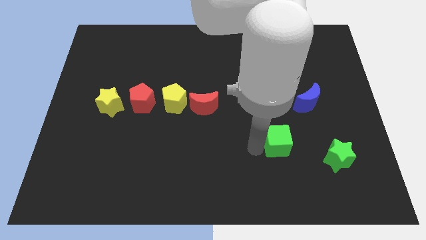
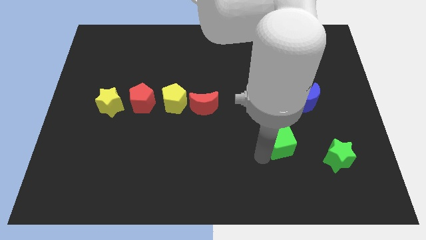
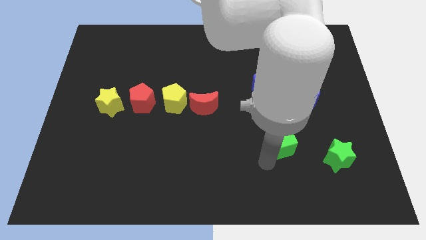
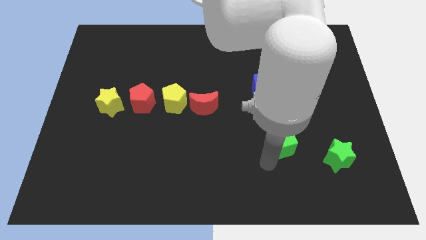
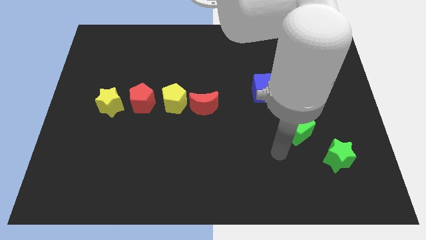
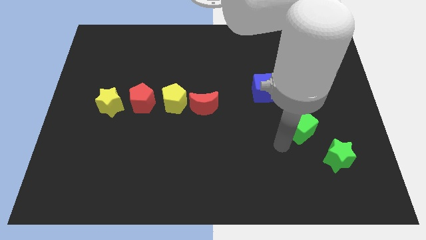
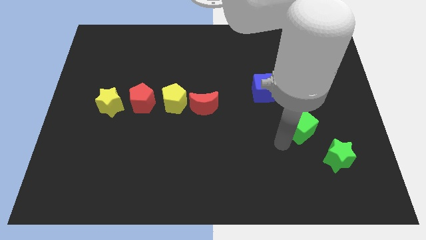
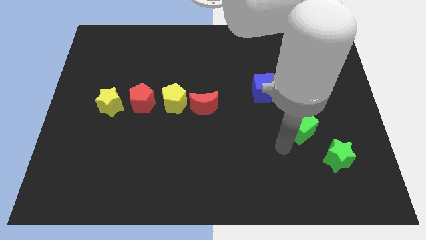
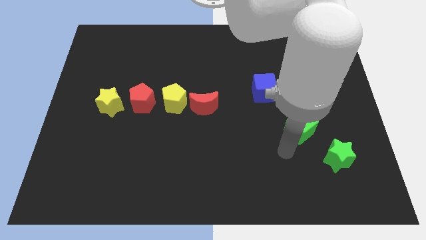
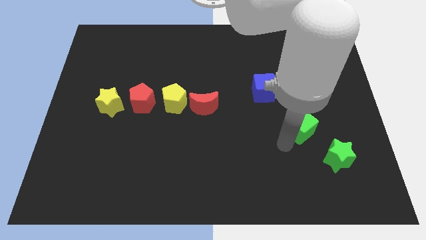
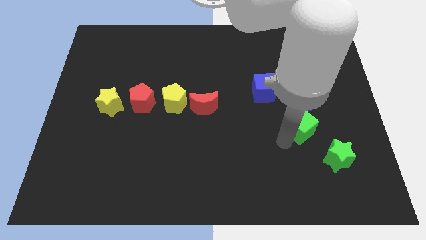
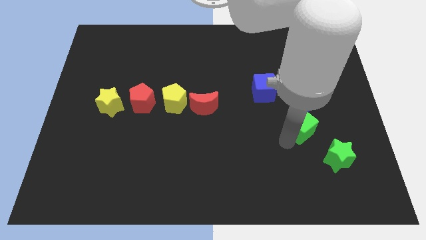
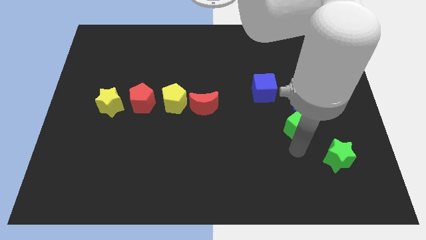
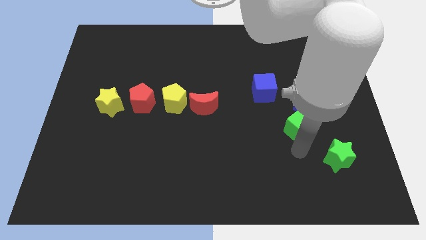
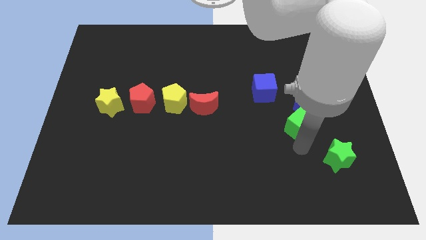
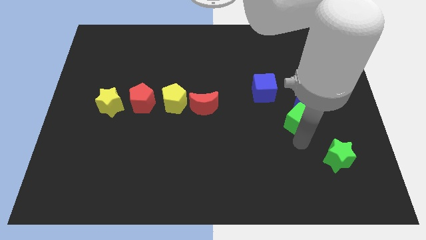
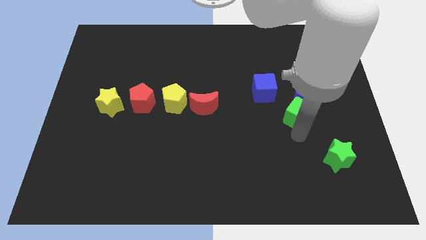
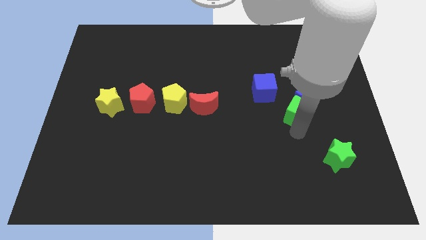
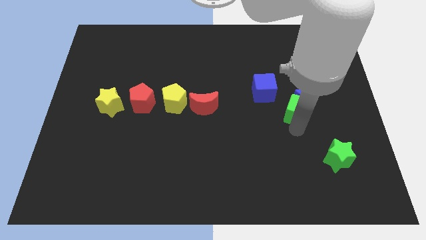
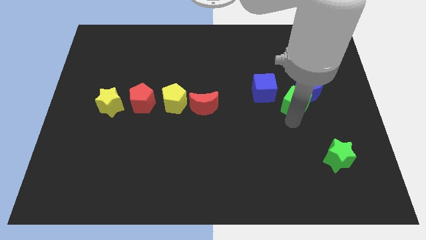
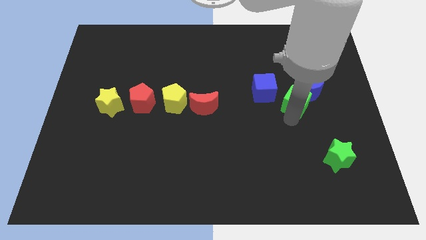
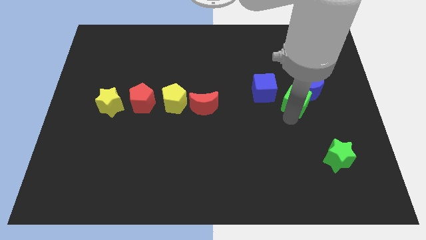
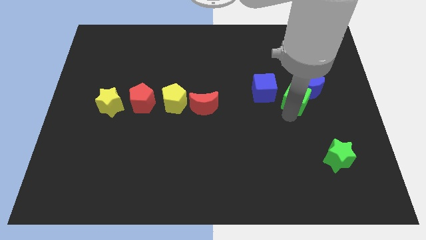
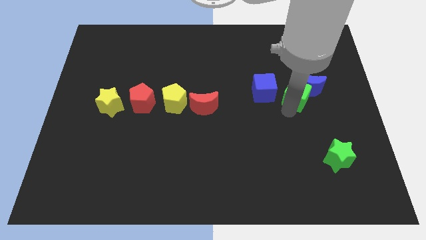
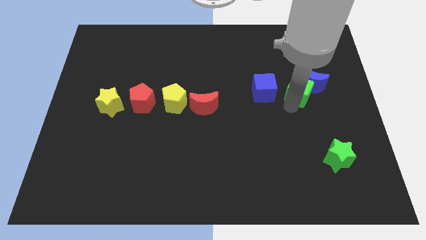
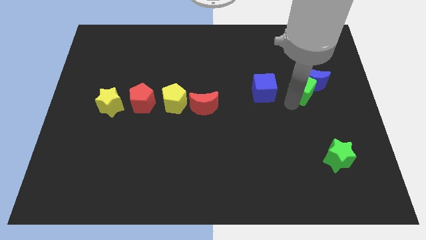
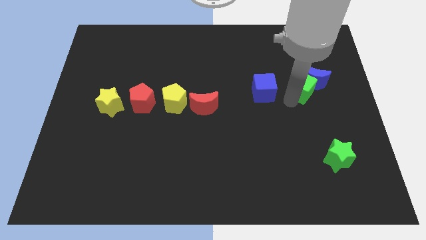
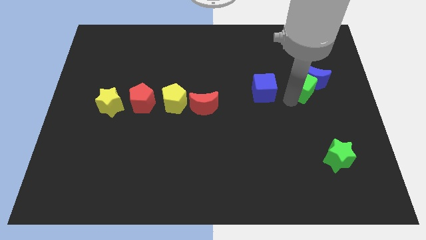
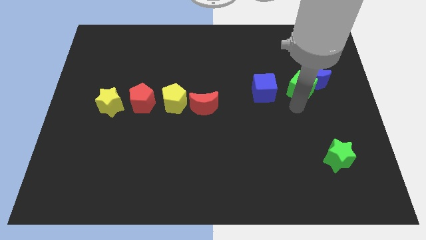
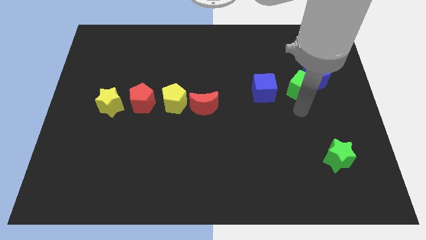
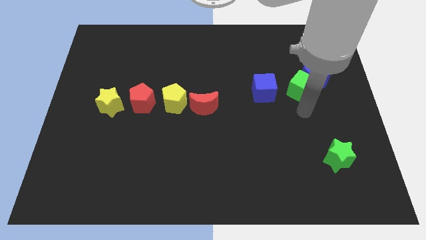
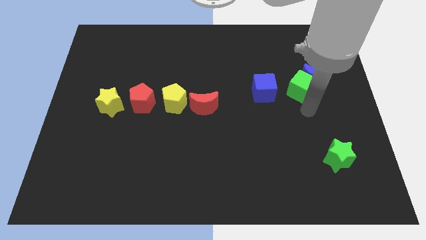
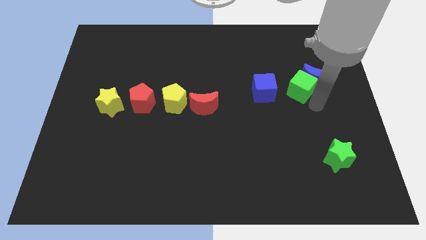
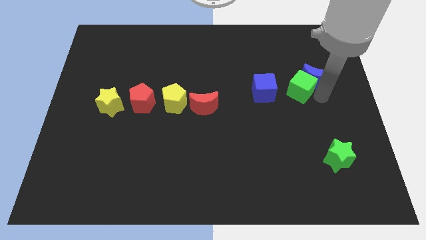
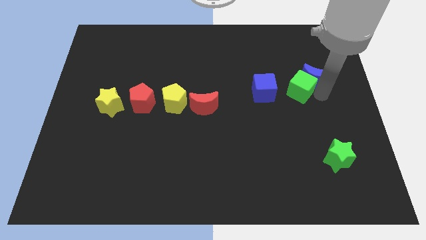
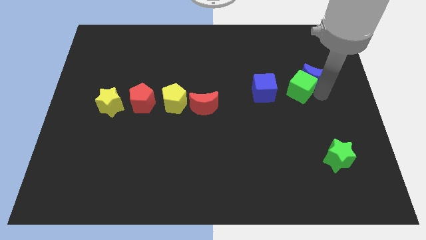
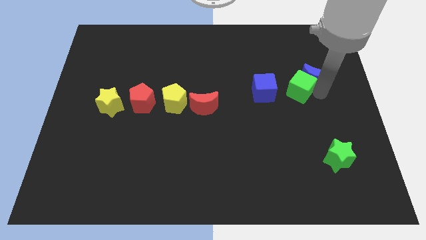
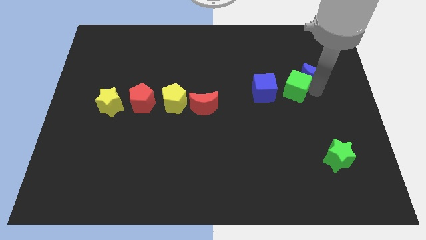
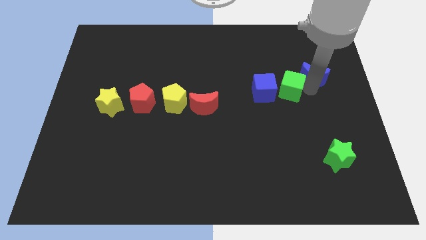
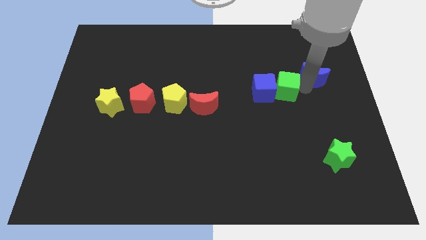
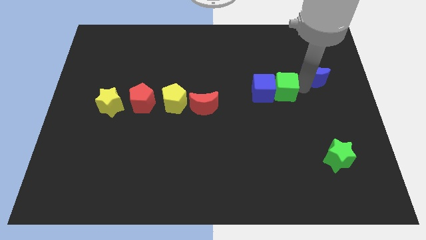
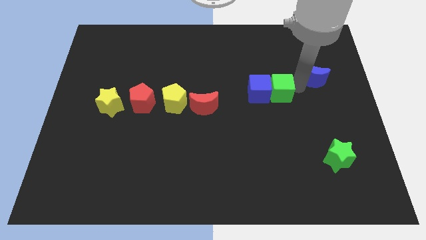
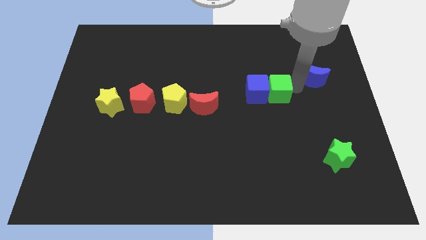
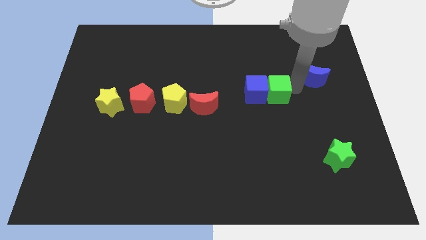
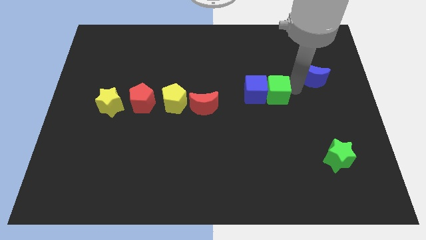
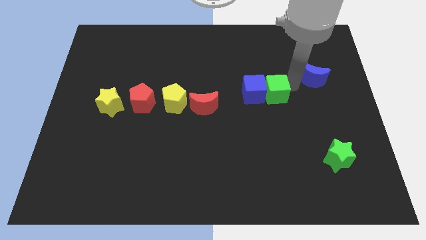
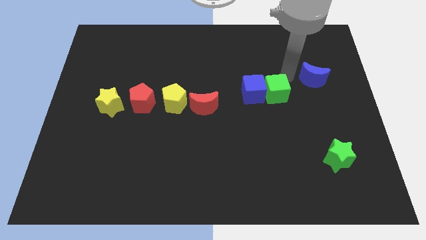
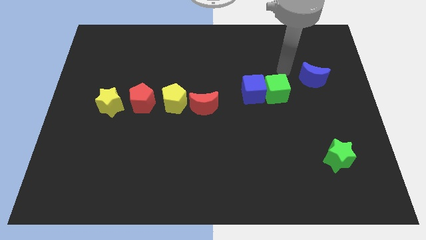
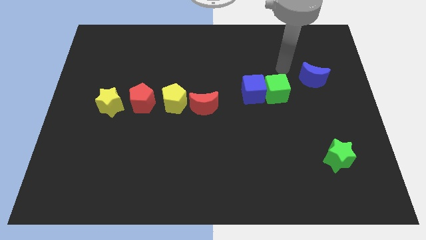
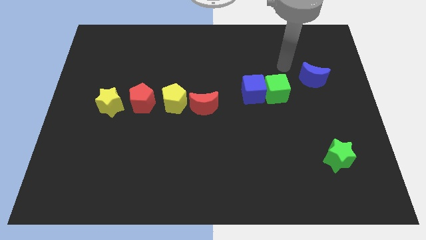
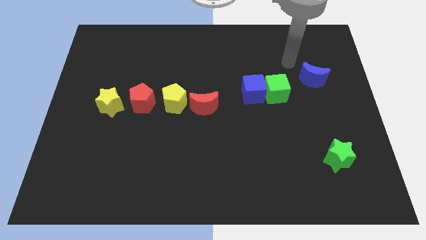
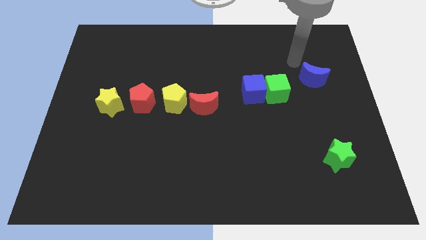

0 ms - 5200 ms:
move the green cube beside blue cube

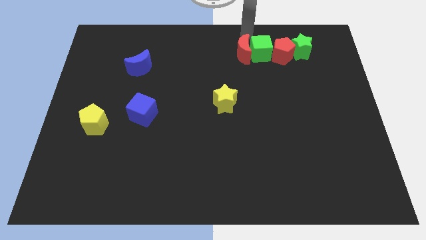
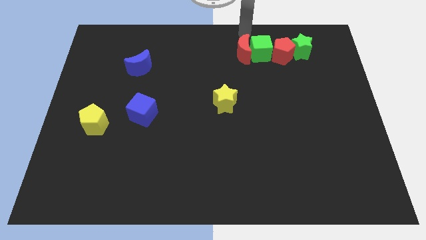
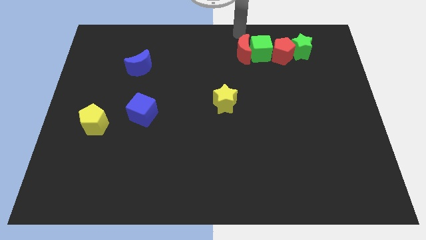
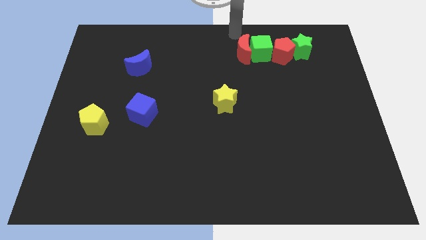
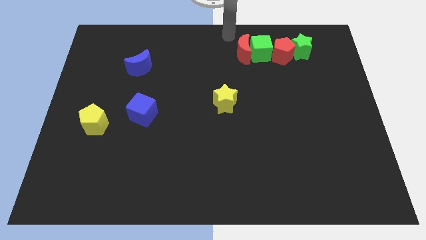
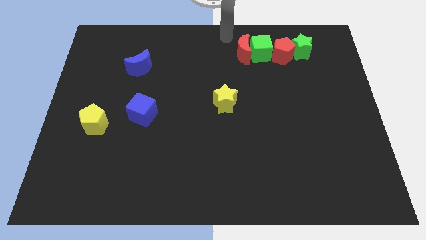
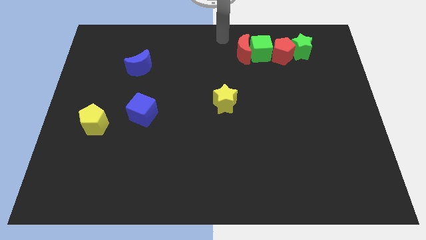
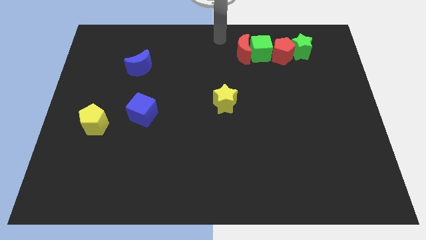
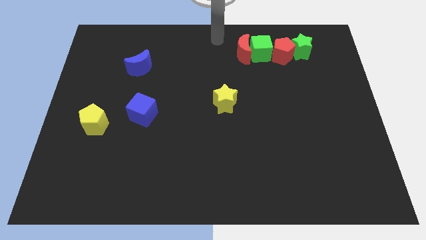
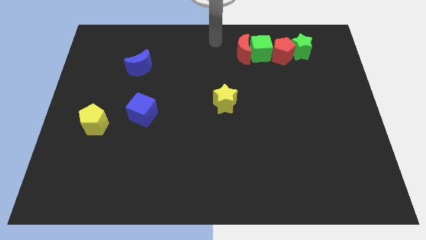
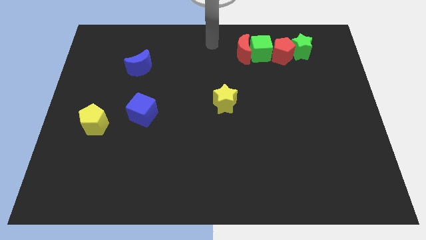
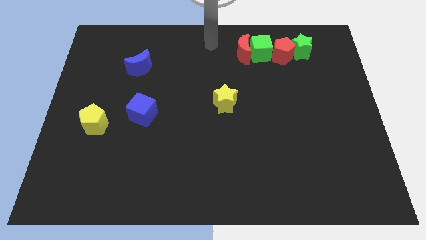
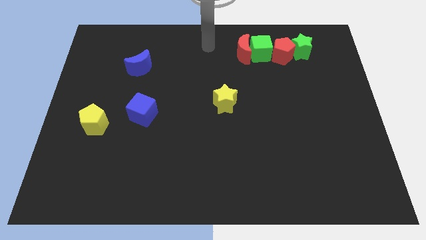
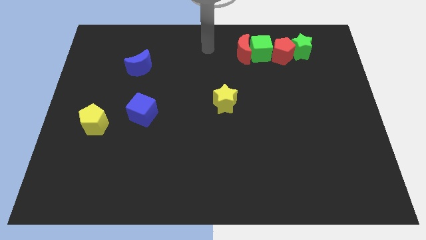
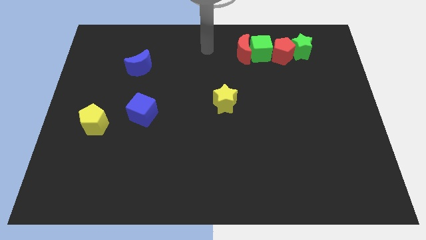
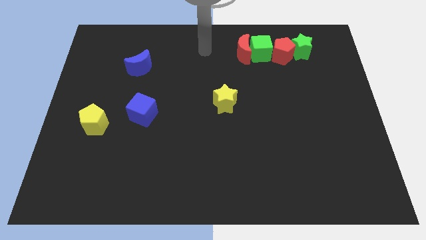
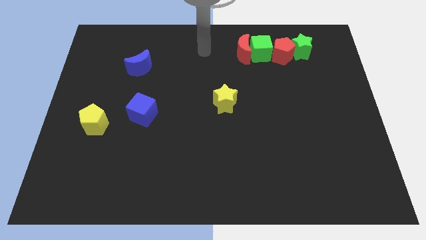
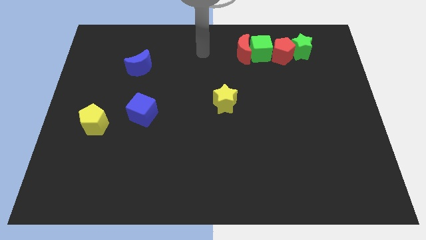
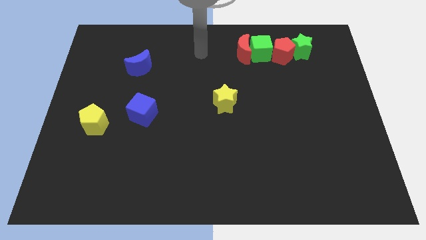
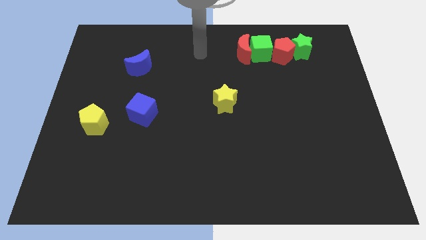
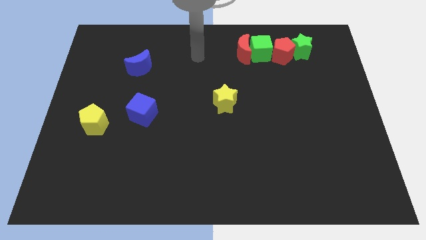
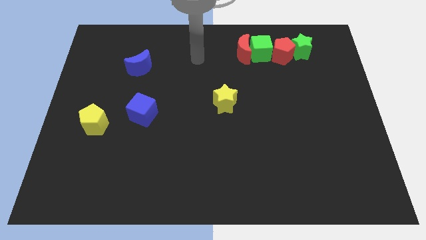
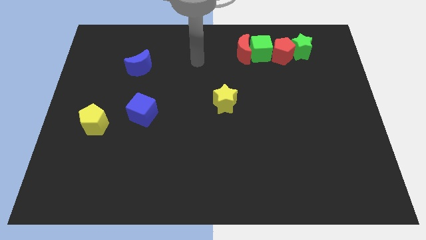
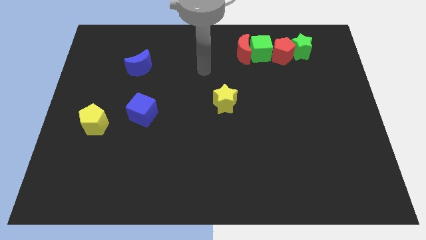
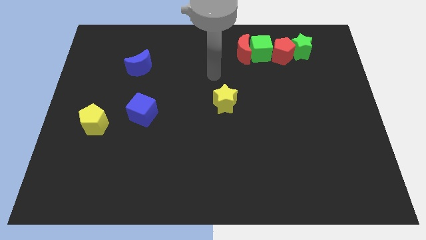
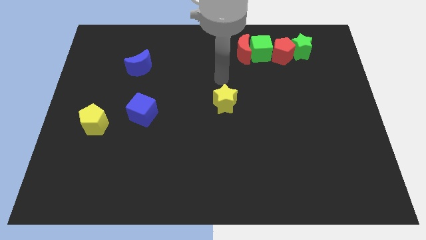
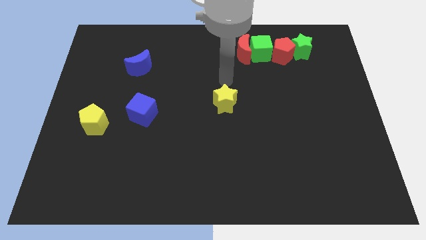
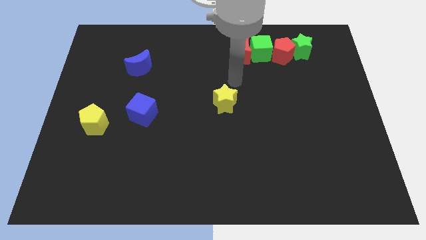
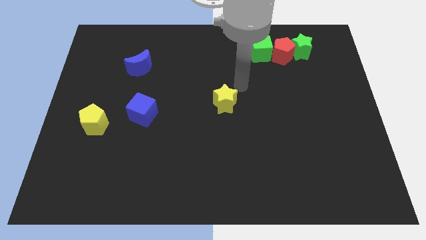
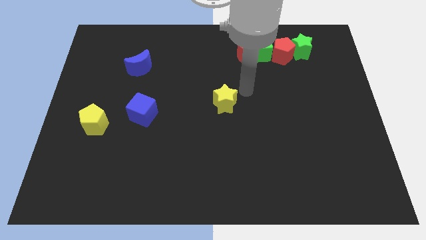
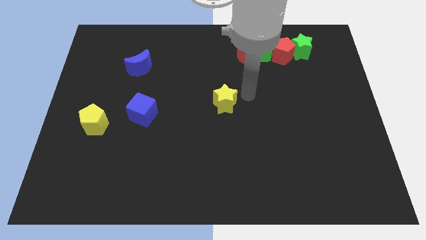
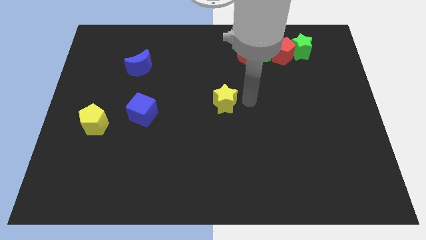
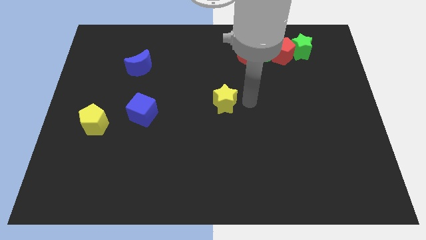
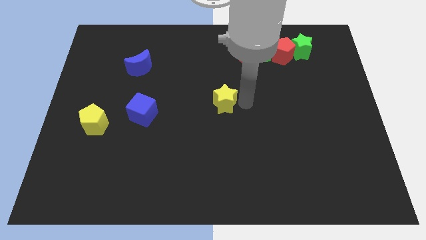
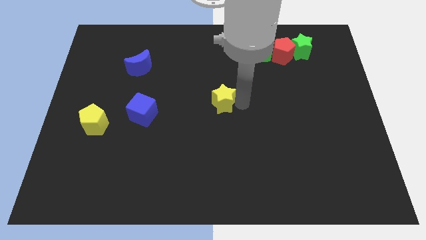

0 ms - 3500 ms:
place the arm right to the yellow star

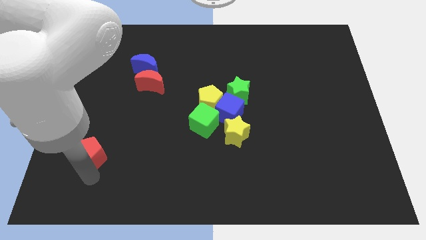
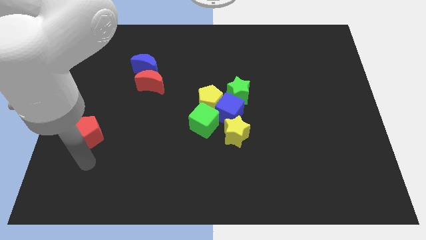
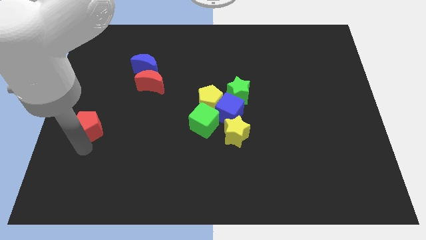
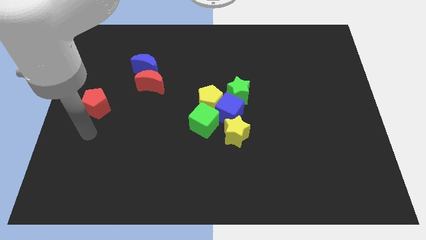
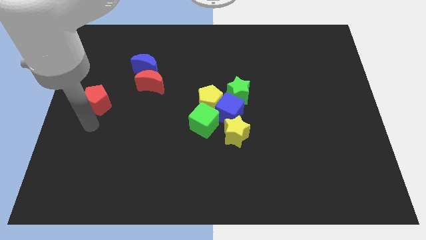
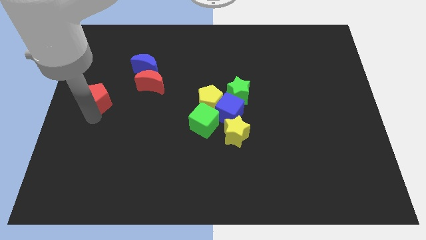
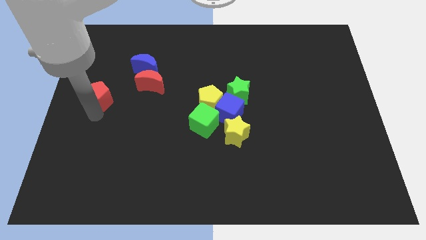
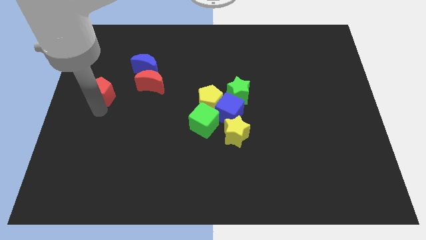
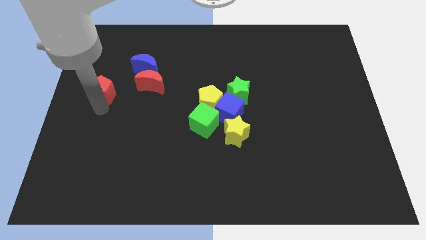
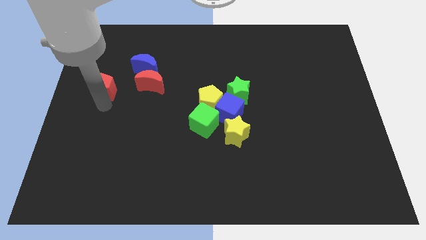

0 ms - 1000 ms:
move the red pentagon to the left of red moon
